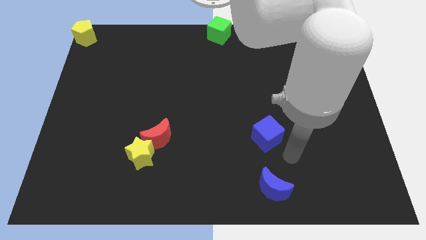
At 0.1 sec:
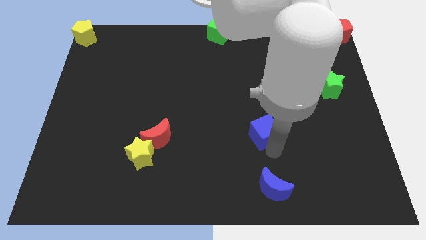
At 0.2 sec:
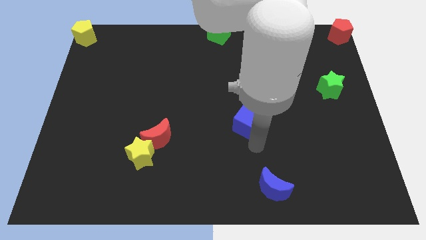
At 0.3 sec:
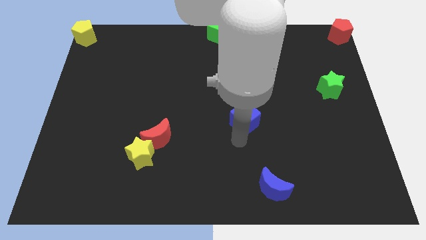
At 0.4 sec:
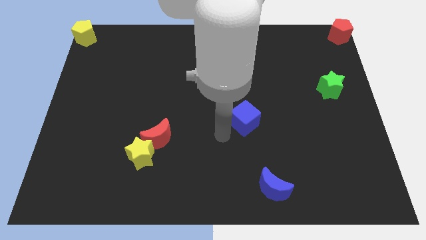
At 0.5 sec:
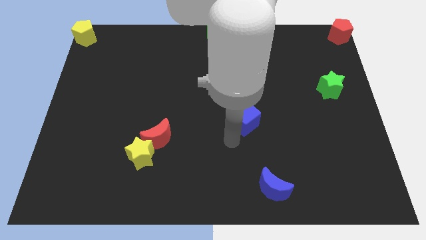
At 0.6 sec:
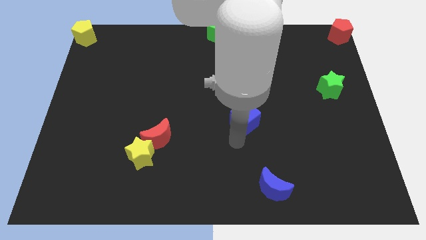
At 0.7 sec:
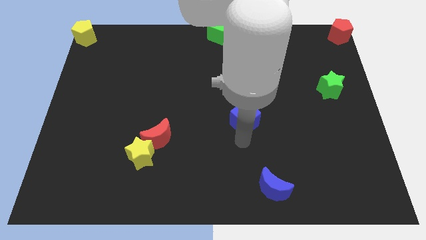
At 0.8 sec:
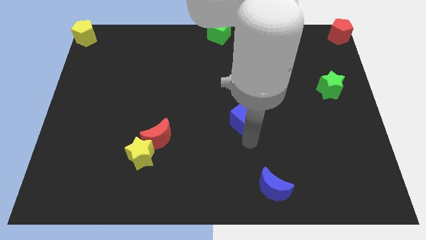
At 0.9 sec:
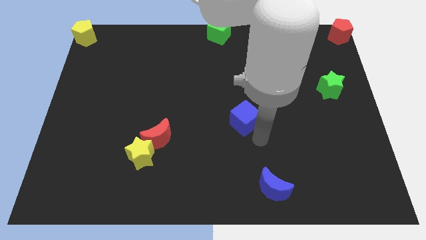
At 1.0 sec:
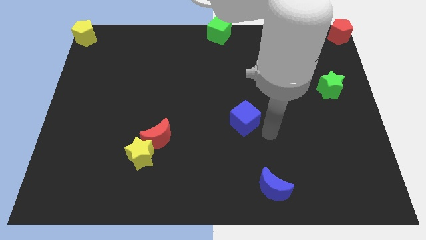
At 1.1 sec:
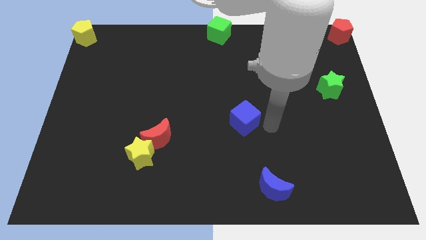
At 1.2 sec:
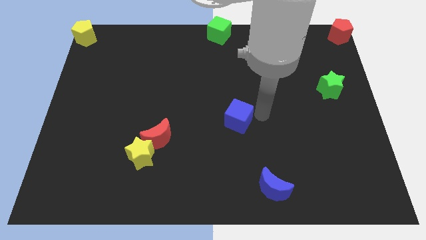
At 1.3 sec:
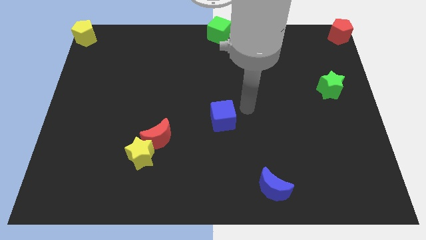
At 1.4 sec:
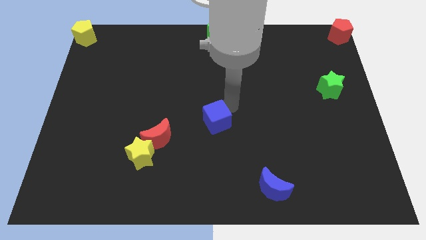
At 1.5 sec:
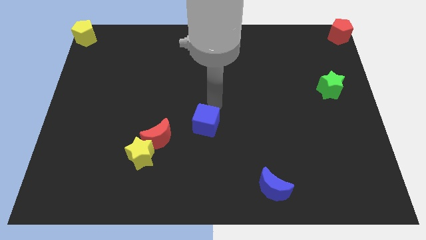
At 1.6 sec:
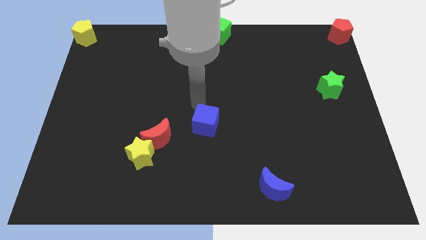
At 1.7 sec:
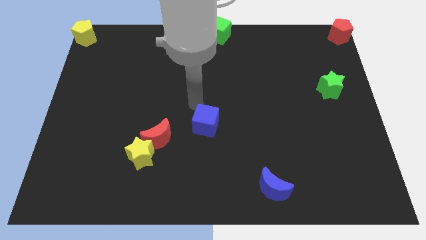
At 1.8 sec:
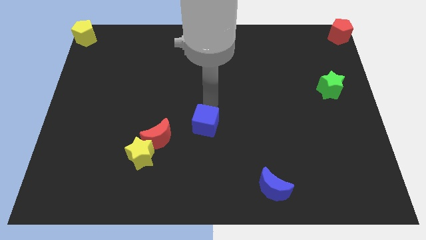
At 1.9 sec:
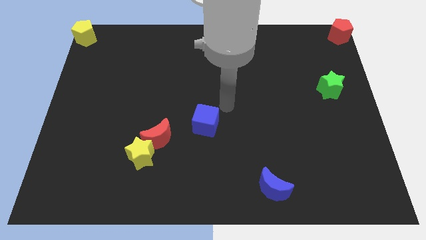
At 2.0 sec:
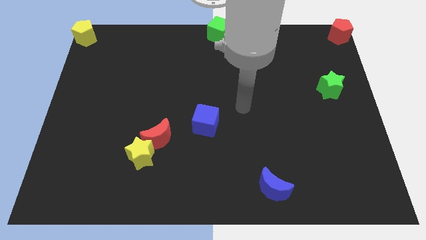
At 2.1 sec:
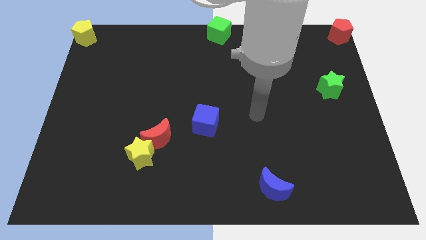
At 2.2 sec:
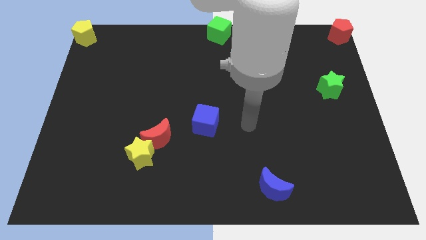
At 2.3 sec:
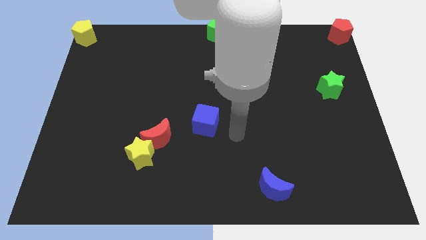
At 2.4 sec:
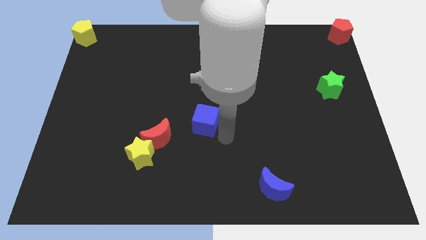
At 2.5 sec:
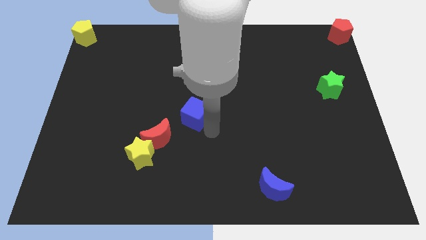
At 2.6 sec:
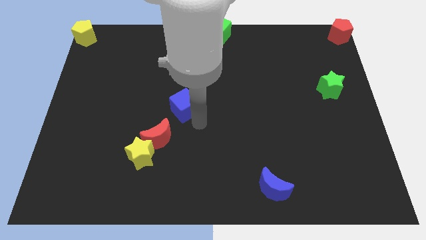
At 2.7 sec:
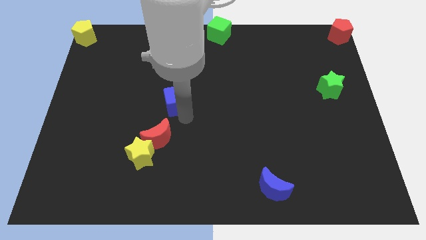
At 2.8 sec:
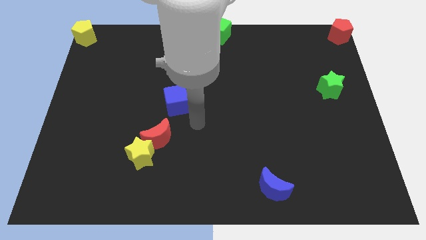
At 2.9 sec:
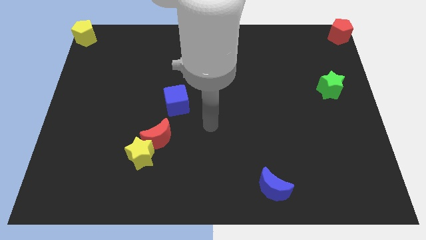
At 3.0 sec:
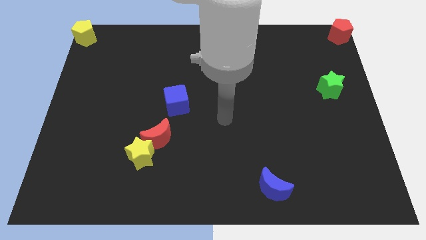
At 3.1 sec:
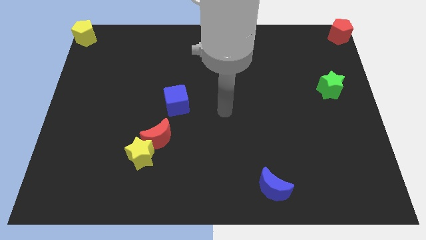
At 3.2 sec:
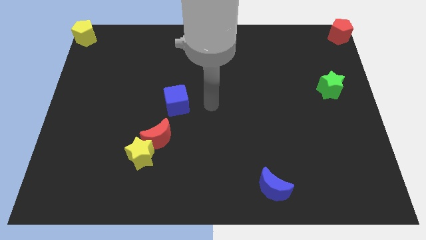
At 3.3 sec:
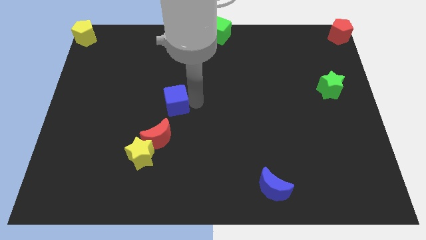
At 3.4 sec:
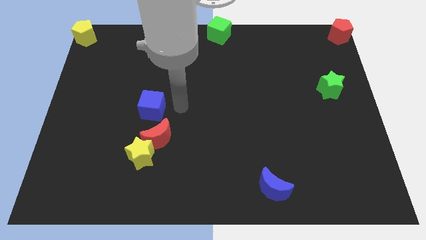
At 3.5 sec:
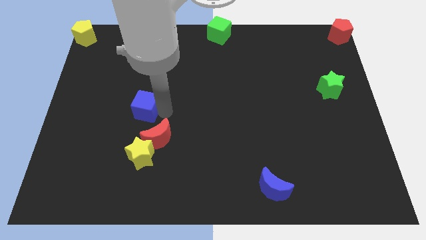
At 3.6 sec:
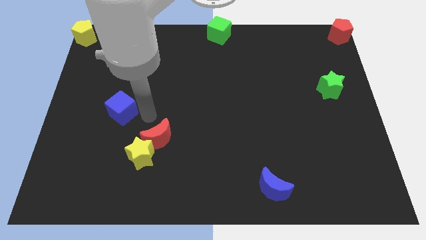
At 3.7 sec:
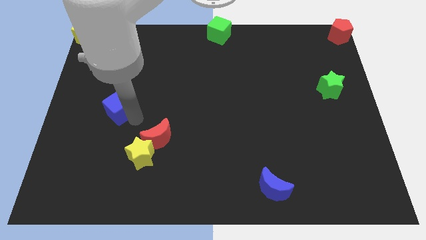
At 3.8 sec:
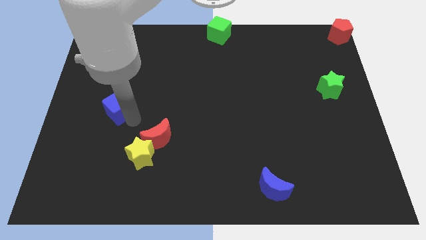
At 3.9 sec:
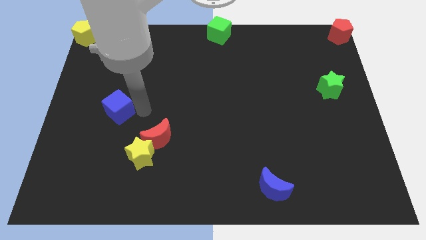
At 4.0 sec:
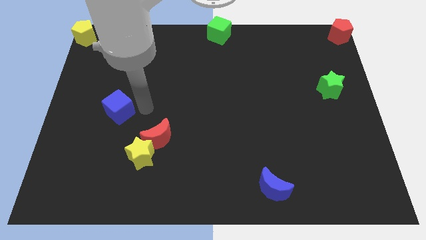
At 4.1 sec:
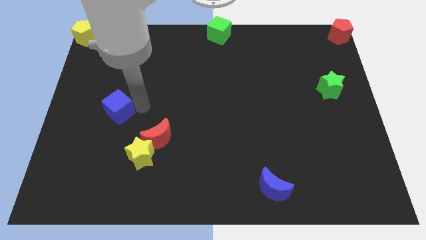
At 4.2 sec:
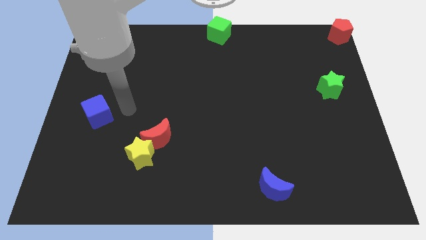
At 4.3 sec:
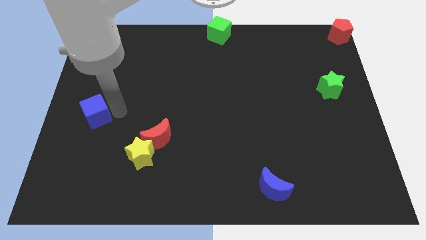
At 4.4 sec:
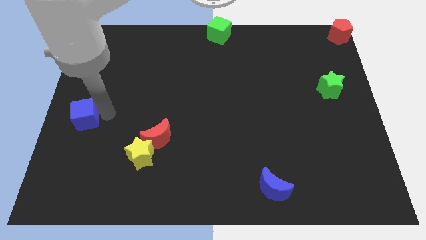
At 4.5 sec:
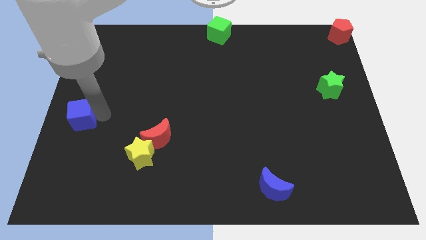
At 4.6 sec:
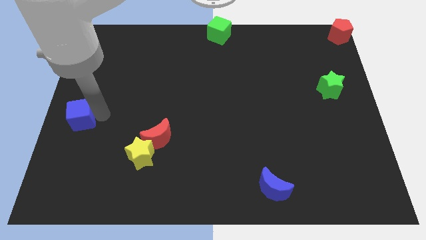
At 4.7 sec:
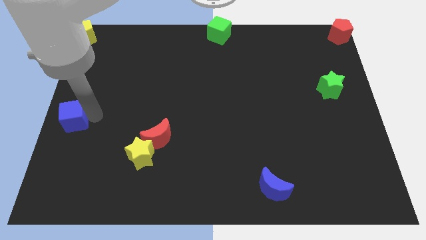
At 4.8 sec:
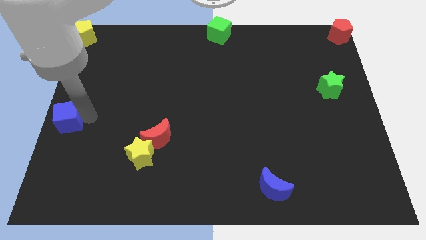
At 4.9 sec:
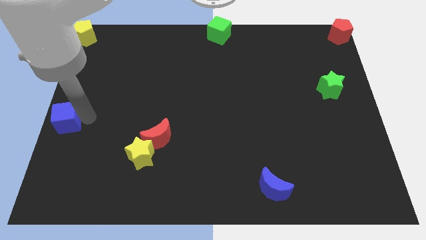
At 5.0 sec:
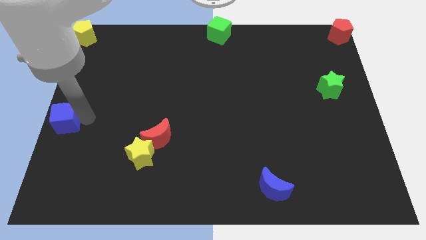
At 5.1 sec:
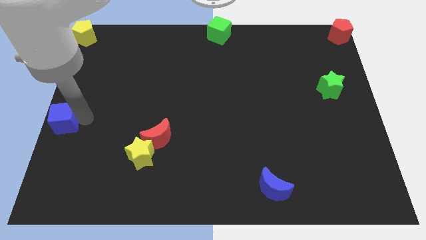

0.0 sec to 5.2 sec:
move the blue cube to the center left

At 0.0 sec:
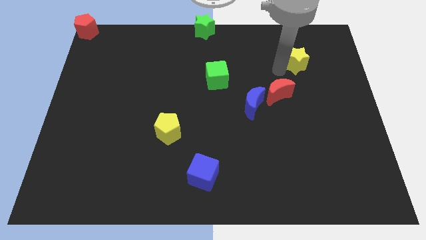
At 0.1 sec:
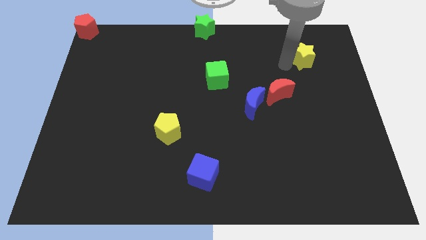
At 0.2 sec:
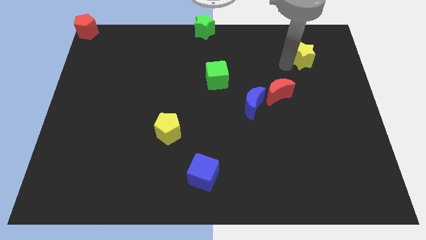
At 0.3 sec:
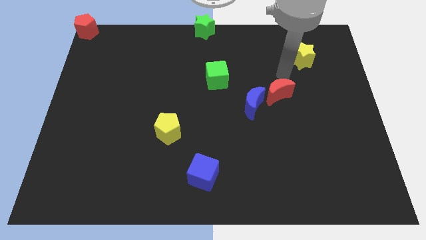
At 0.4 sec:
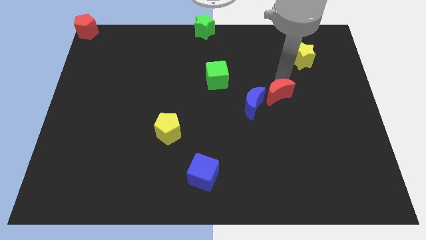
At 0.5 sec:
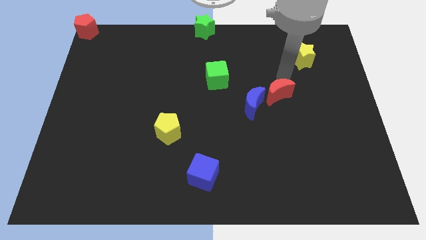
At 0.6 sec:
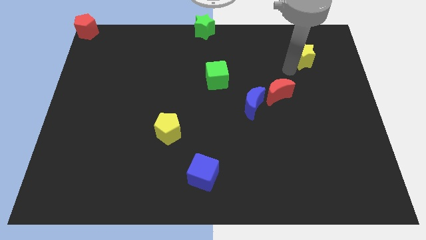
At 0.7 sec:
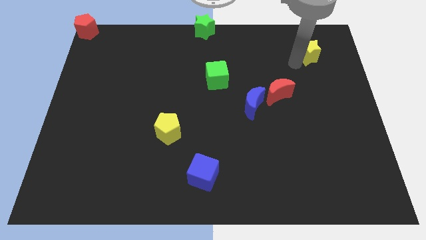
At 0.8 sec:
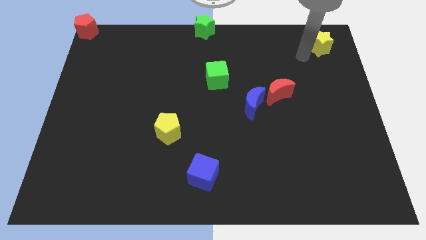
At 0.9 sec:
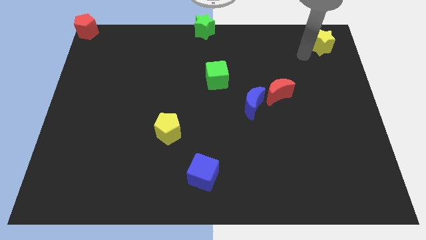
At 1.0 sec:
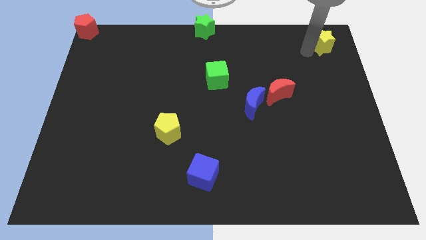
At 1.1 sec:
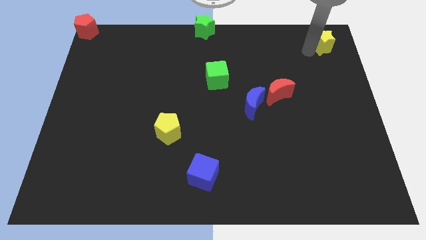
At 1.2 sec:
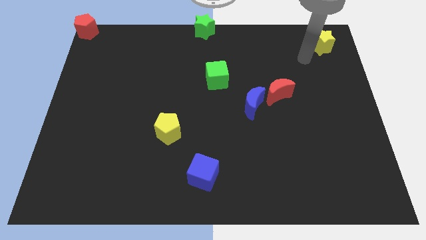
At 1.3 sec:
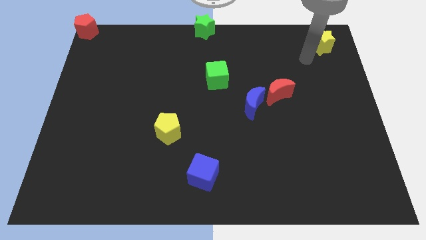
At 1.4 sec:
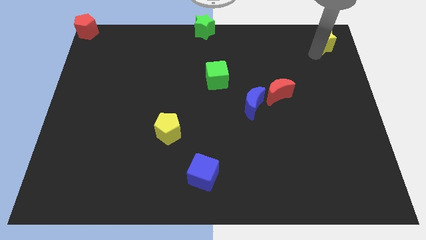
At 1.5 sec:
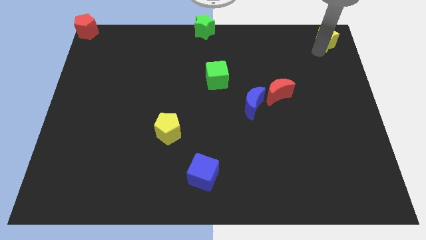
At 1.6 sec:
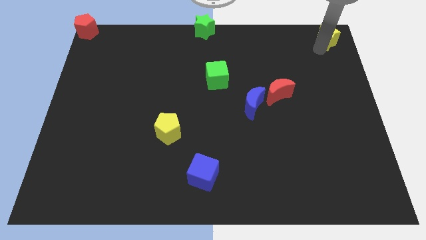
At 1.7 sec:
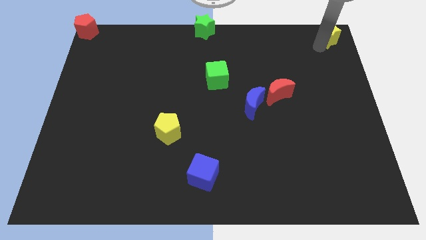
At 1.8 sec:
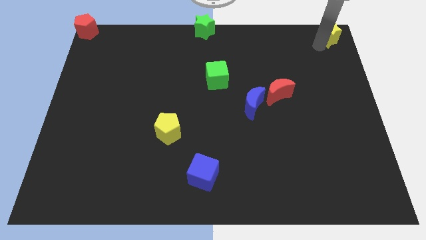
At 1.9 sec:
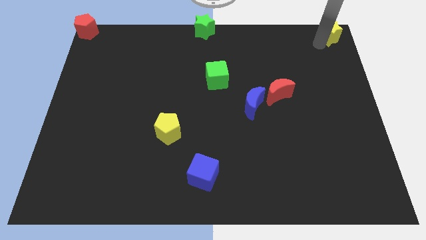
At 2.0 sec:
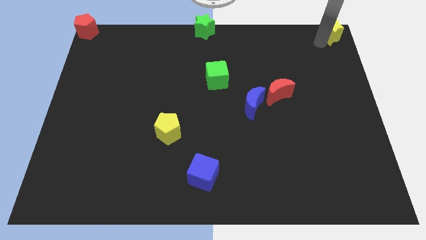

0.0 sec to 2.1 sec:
drag the yellow star towards the top right side of the board

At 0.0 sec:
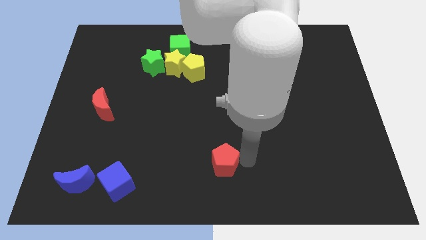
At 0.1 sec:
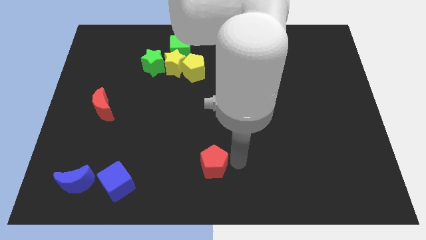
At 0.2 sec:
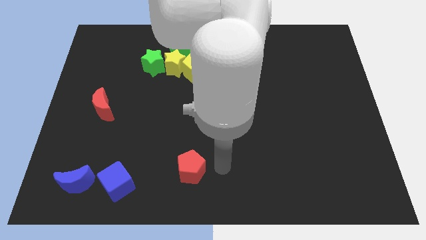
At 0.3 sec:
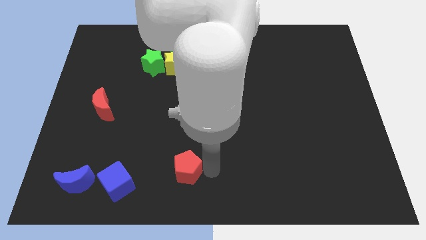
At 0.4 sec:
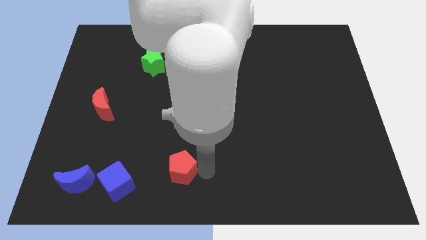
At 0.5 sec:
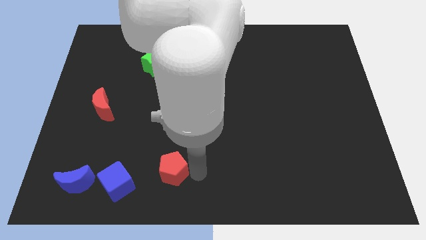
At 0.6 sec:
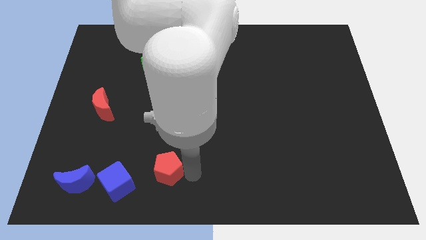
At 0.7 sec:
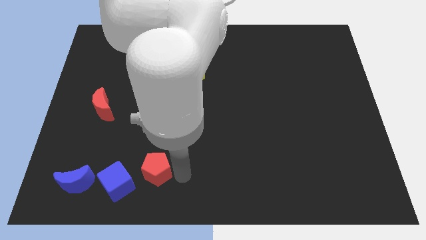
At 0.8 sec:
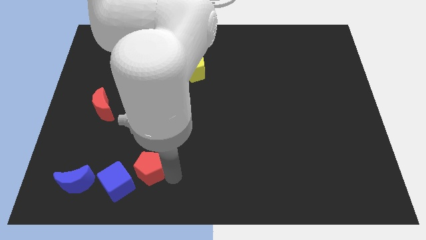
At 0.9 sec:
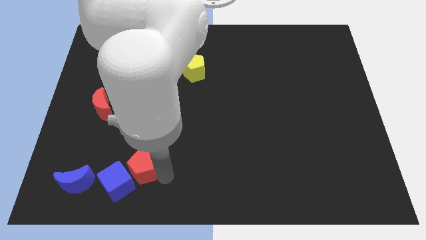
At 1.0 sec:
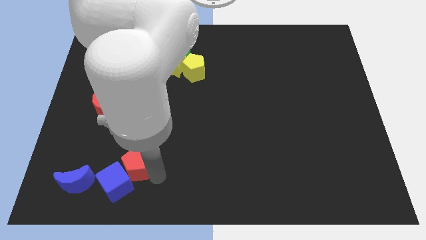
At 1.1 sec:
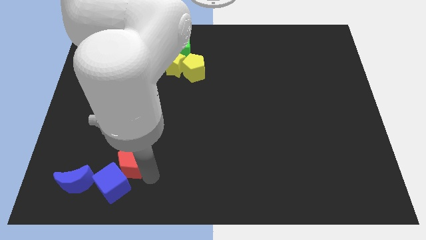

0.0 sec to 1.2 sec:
move the red pentagon into the blue cube

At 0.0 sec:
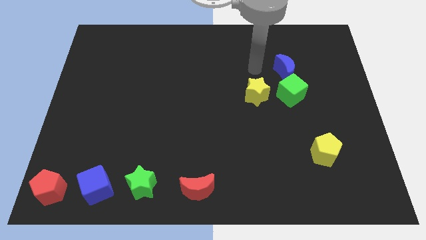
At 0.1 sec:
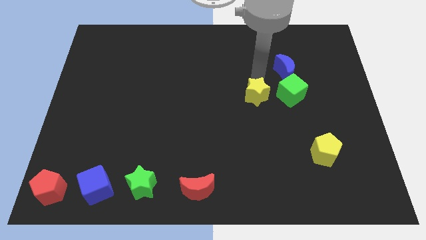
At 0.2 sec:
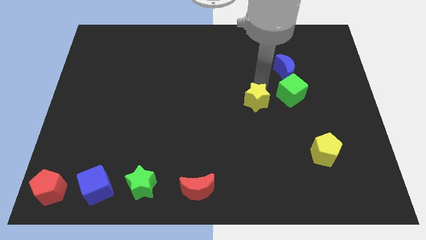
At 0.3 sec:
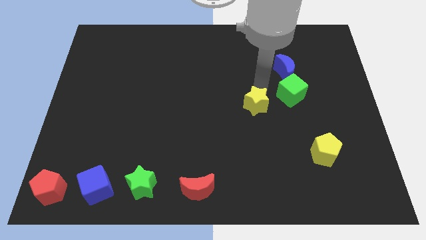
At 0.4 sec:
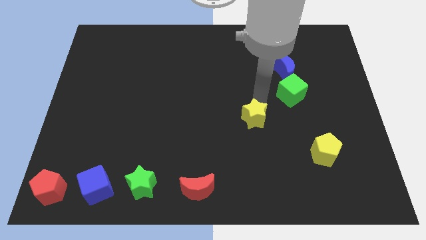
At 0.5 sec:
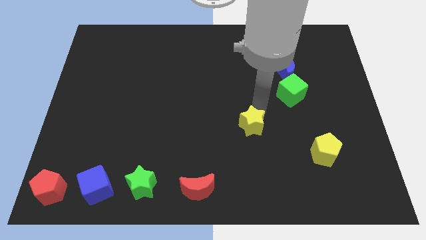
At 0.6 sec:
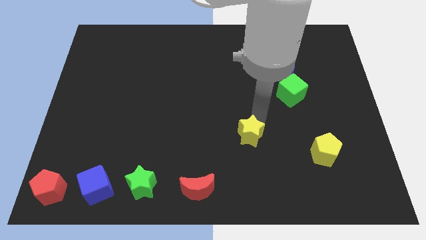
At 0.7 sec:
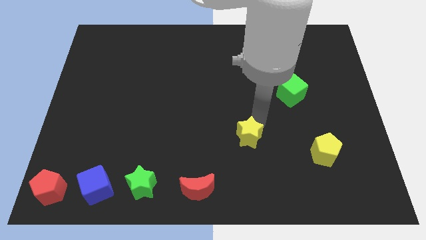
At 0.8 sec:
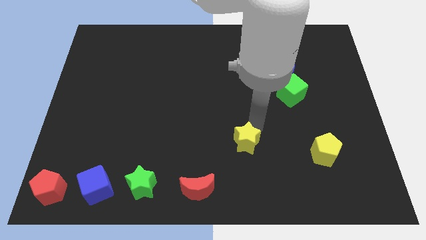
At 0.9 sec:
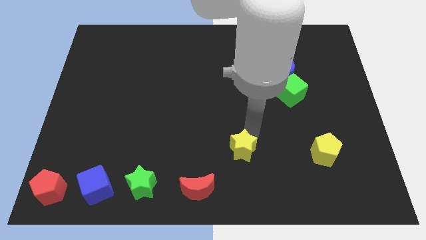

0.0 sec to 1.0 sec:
place the yellow star parallel to yellow pentagon
